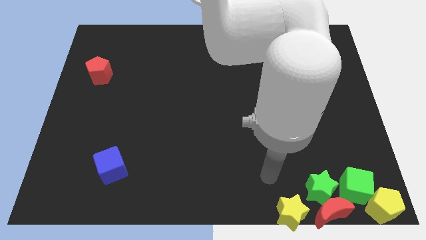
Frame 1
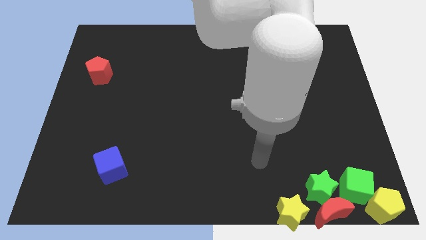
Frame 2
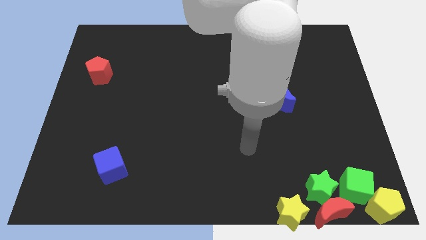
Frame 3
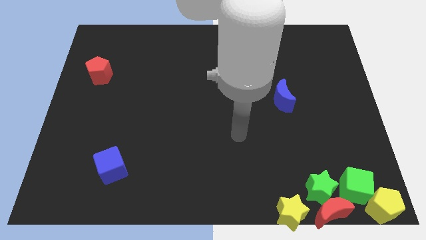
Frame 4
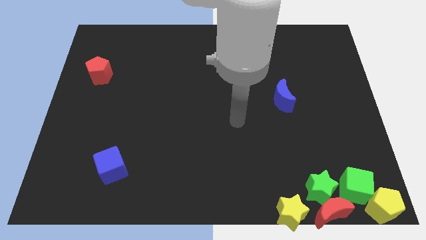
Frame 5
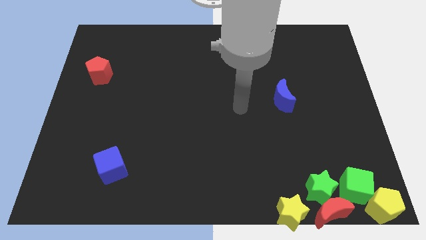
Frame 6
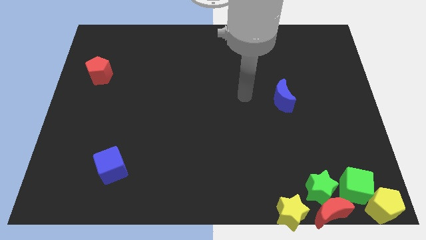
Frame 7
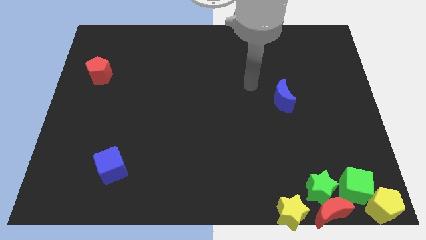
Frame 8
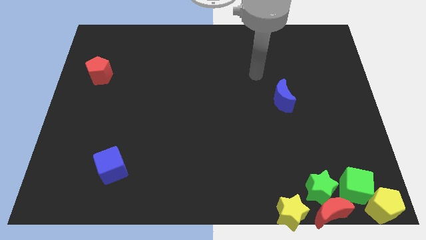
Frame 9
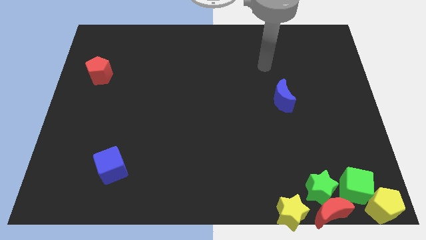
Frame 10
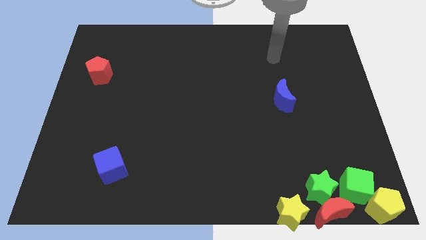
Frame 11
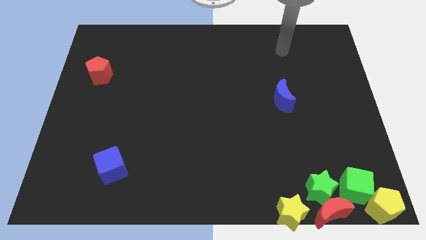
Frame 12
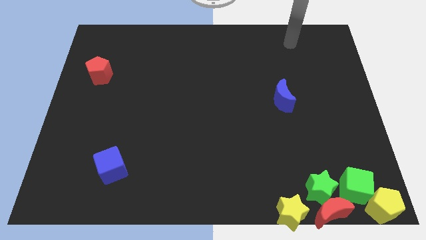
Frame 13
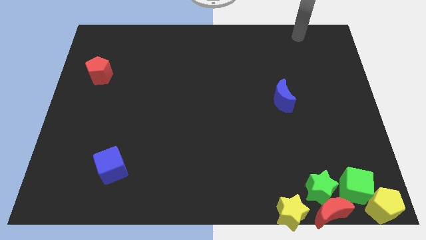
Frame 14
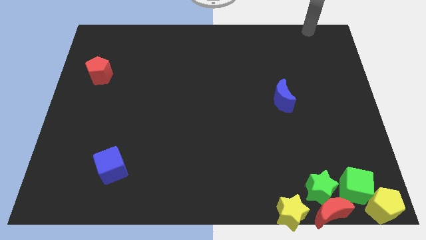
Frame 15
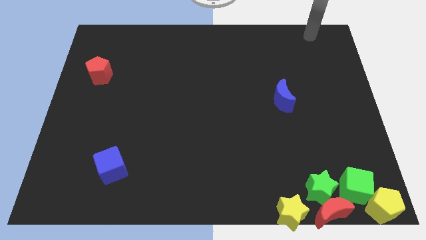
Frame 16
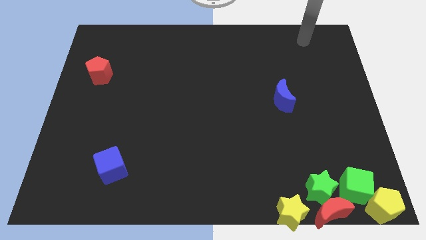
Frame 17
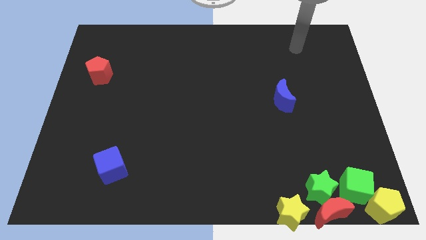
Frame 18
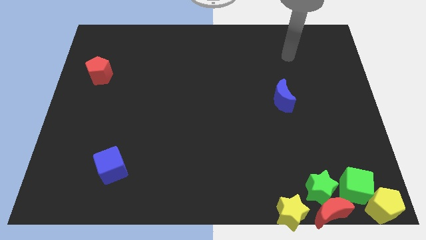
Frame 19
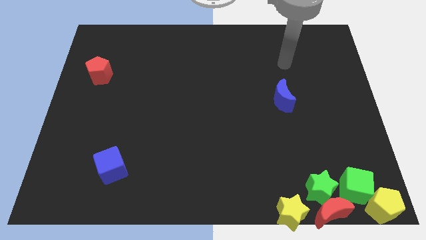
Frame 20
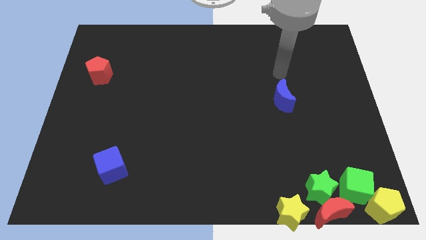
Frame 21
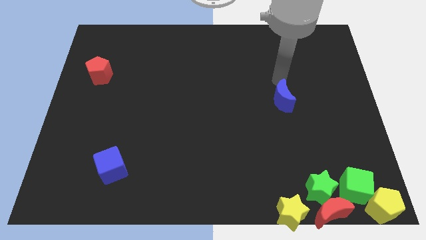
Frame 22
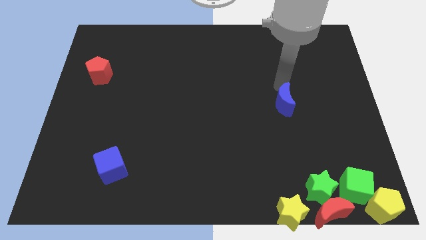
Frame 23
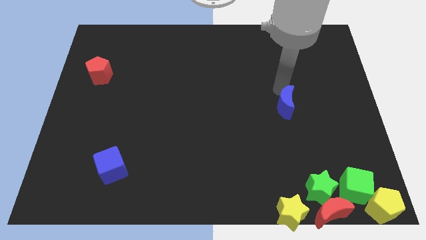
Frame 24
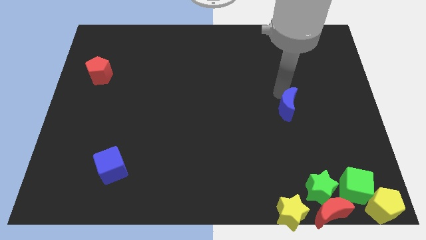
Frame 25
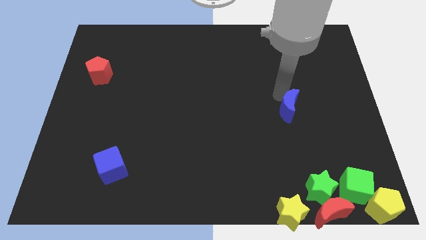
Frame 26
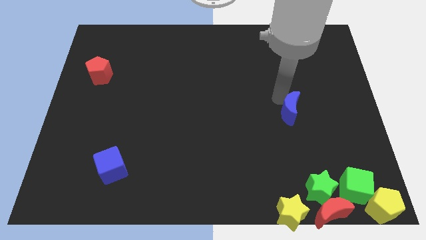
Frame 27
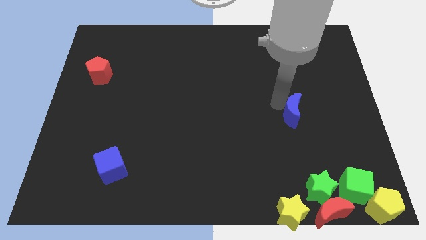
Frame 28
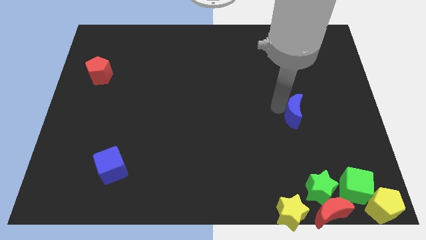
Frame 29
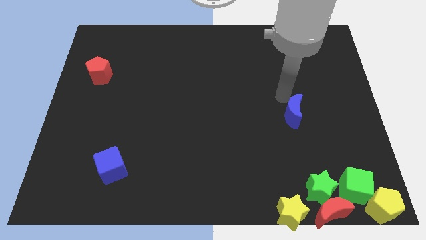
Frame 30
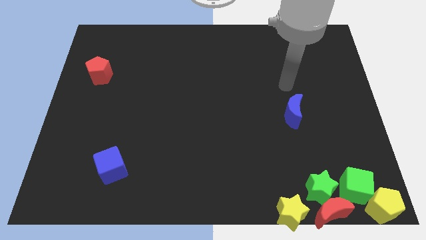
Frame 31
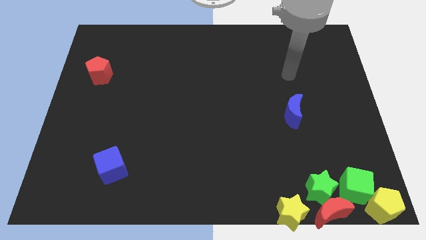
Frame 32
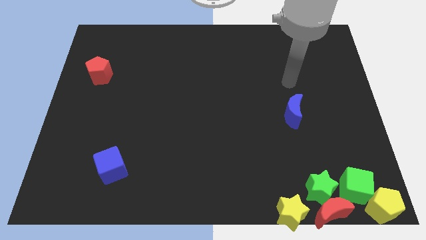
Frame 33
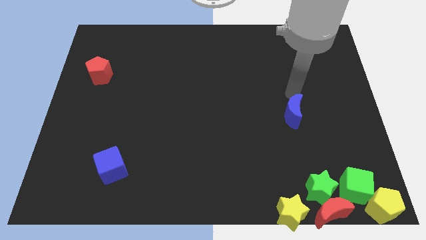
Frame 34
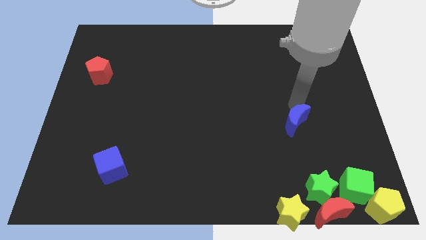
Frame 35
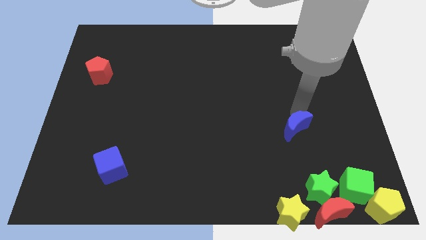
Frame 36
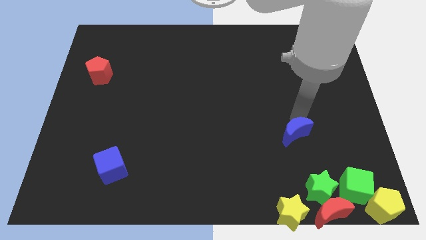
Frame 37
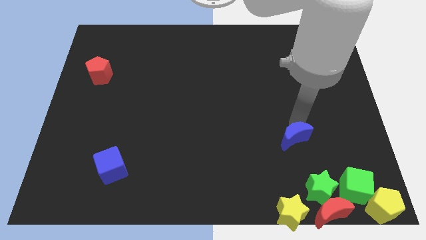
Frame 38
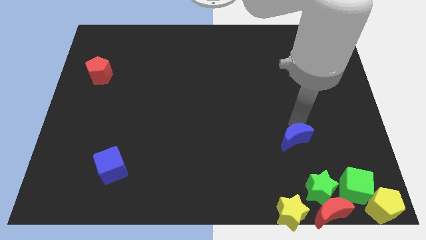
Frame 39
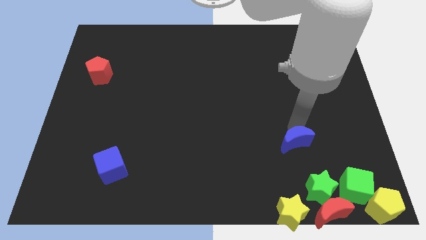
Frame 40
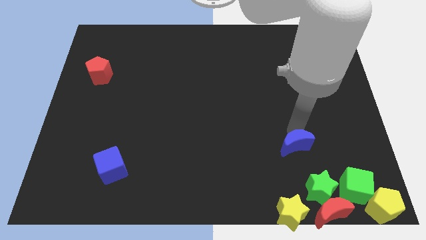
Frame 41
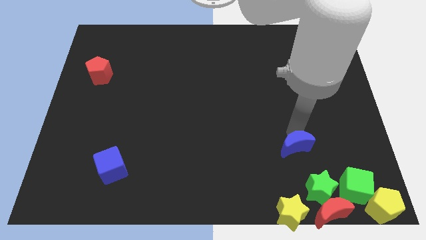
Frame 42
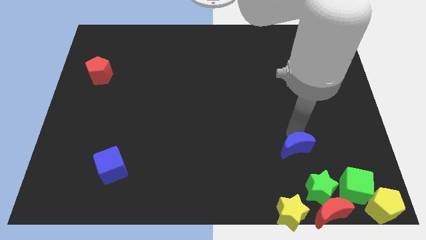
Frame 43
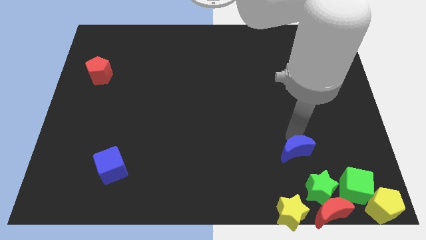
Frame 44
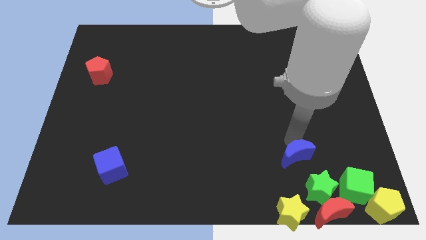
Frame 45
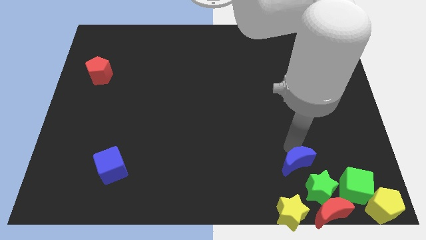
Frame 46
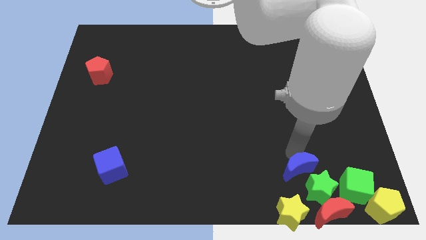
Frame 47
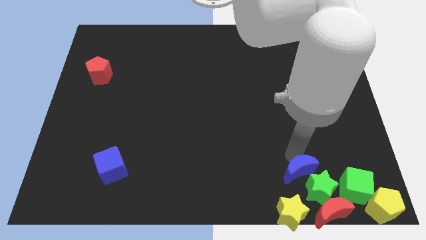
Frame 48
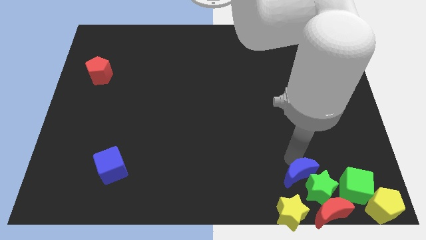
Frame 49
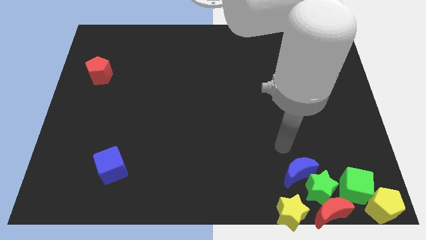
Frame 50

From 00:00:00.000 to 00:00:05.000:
make the blue crescent touch the green star

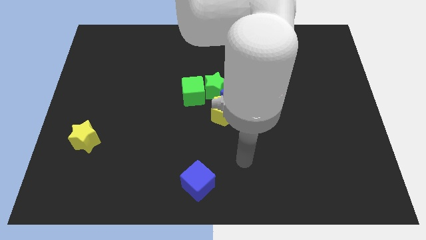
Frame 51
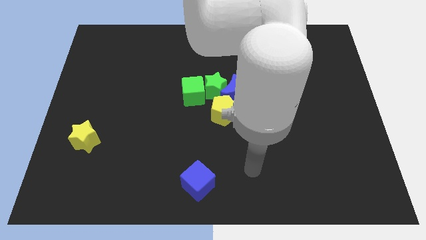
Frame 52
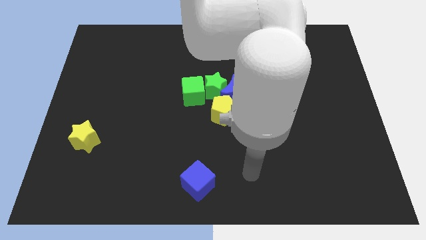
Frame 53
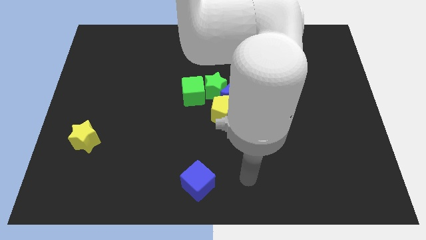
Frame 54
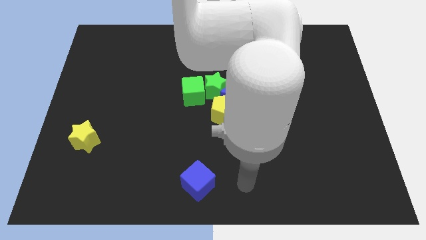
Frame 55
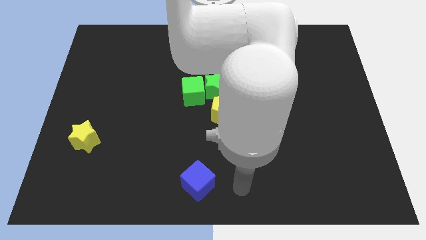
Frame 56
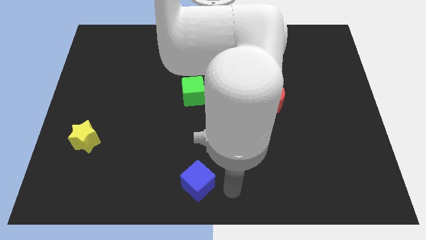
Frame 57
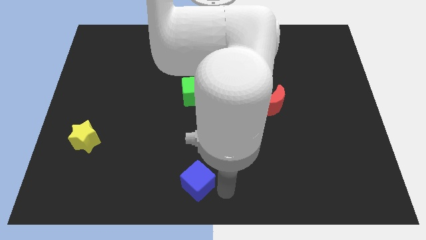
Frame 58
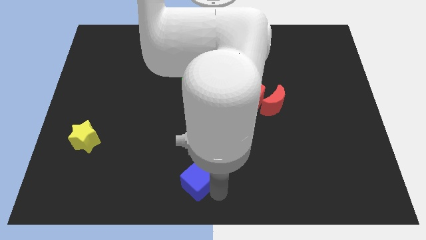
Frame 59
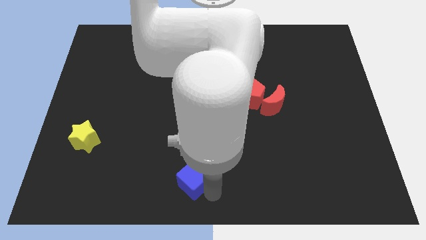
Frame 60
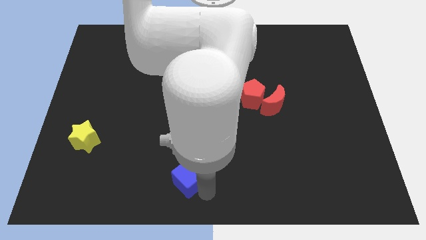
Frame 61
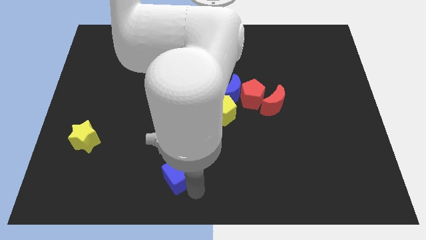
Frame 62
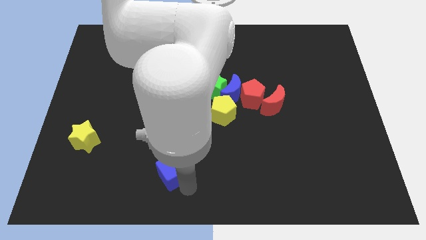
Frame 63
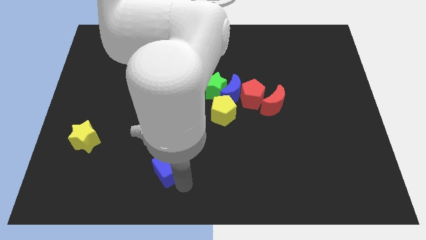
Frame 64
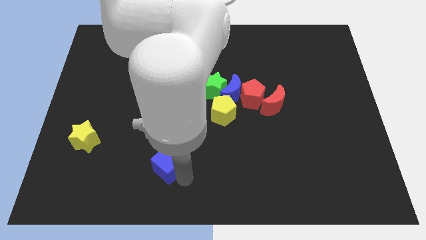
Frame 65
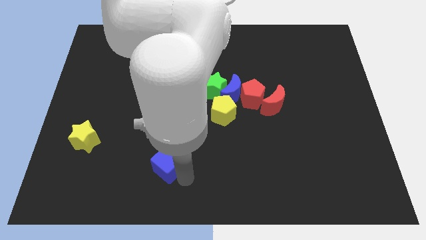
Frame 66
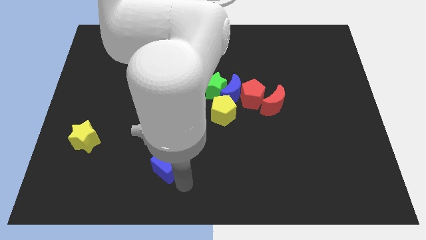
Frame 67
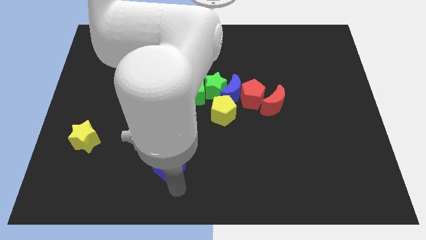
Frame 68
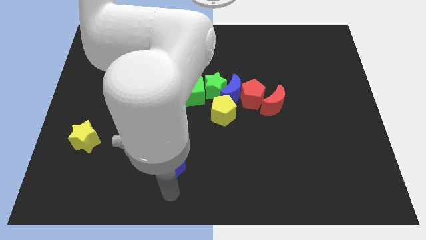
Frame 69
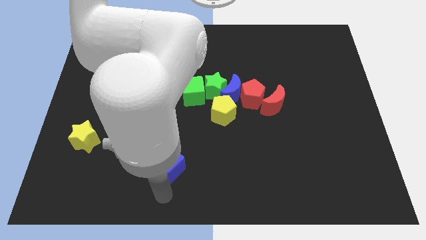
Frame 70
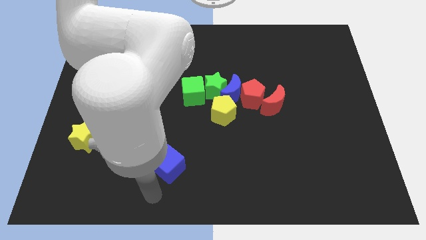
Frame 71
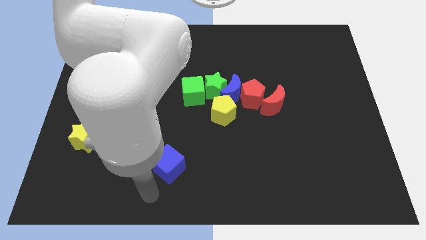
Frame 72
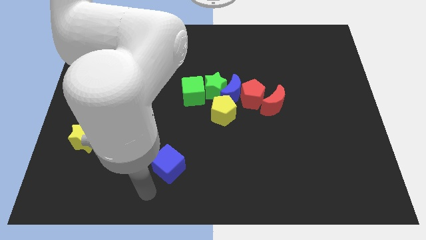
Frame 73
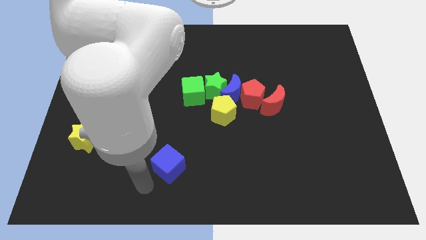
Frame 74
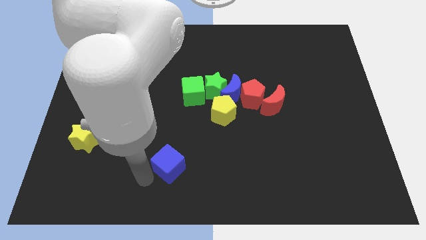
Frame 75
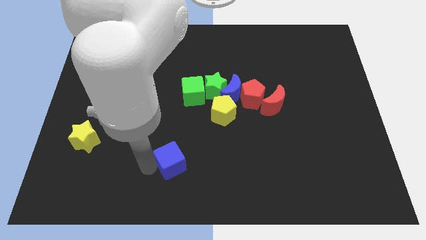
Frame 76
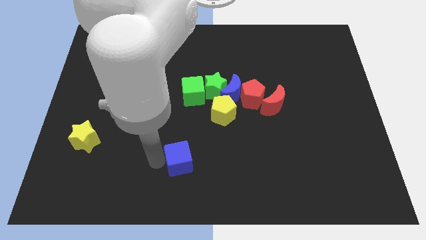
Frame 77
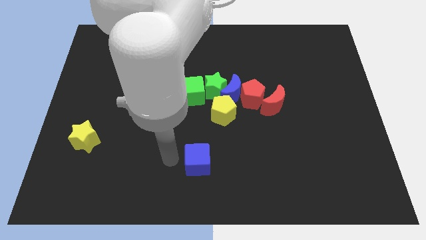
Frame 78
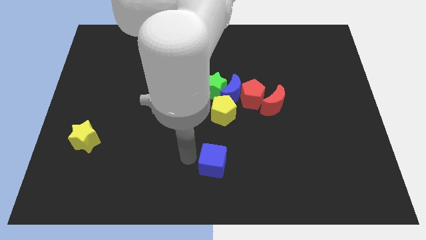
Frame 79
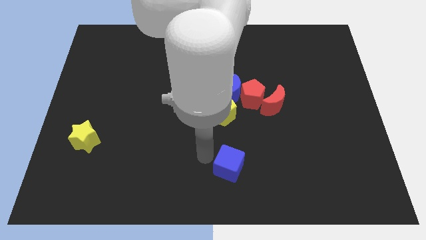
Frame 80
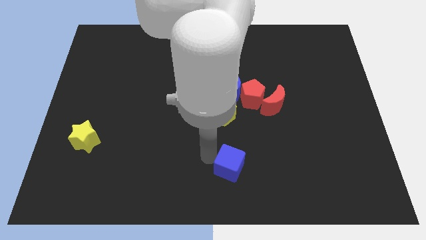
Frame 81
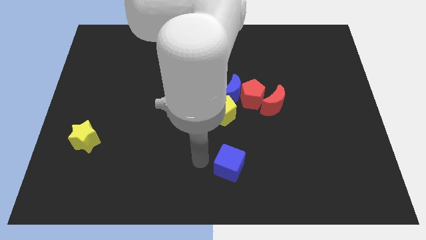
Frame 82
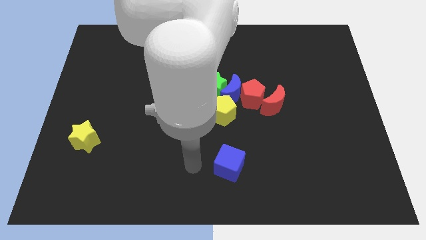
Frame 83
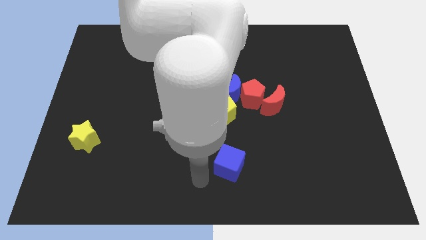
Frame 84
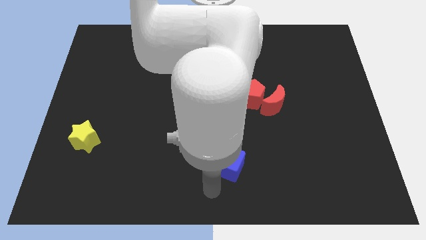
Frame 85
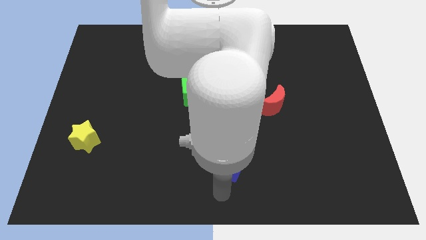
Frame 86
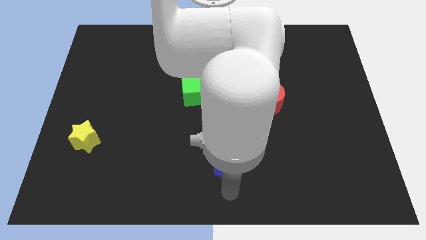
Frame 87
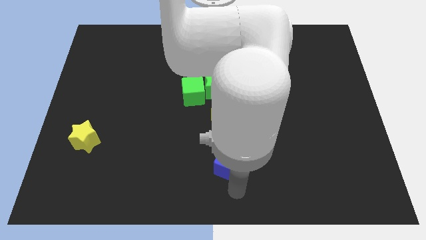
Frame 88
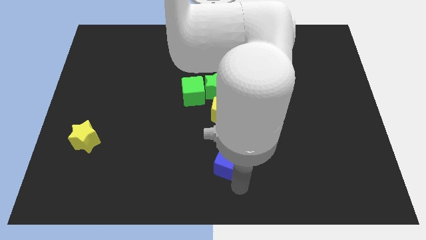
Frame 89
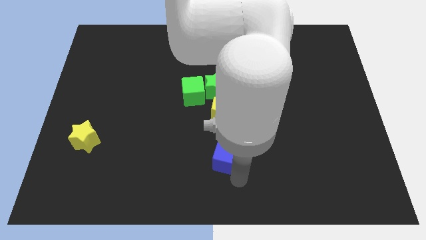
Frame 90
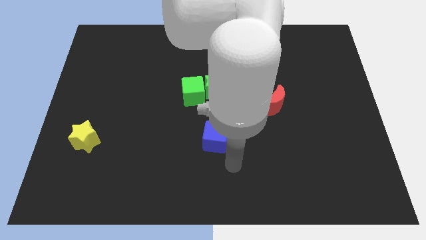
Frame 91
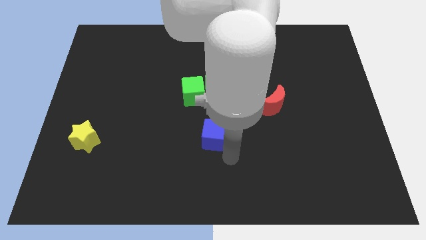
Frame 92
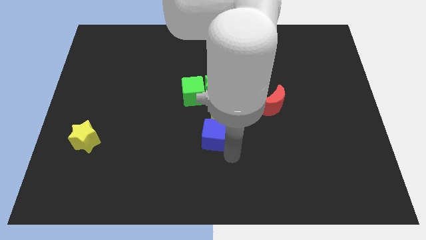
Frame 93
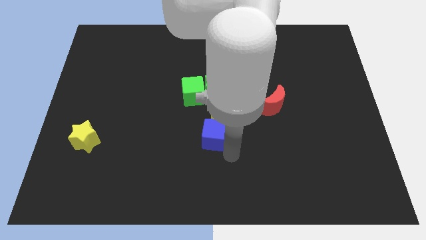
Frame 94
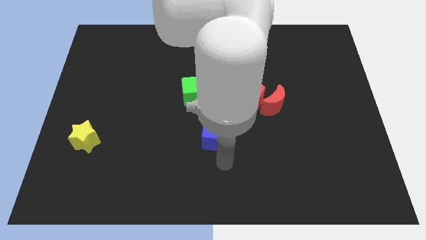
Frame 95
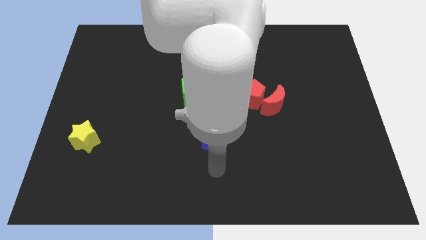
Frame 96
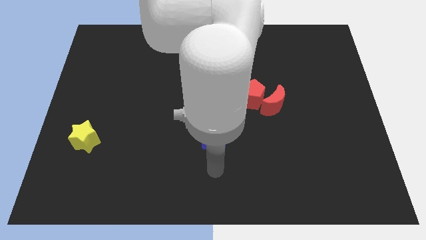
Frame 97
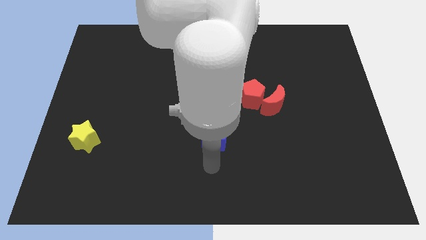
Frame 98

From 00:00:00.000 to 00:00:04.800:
push the blue cube upward
